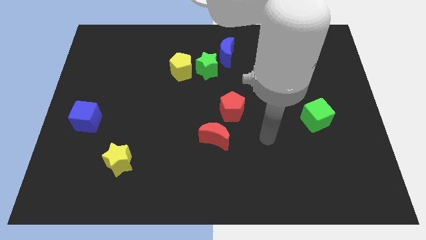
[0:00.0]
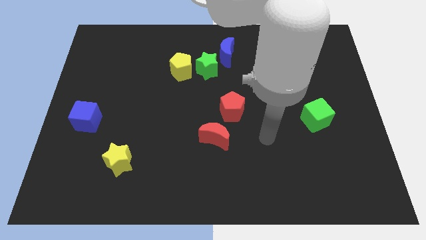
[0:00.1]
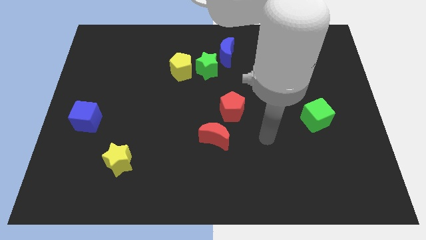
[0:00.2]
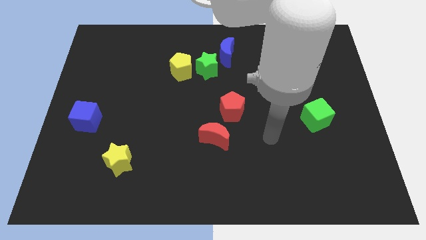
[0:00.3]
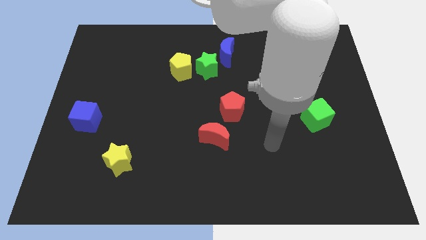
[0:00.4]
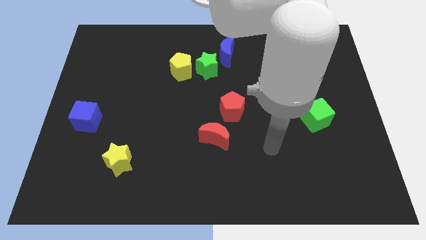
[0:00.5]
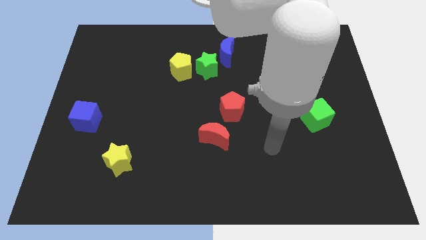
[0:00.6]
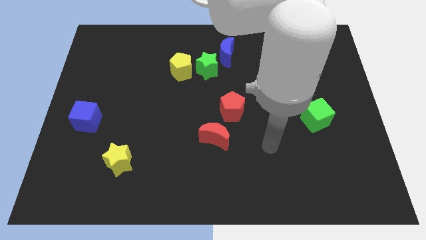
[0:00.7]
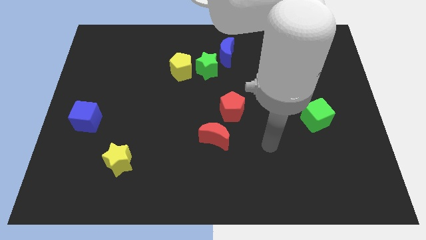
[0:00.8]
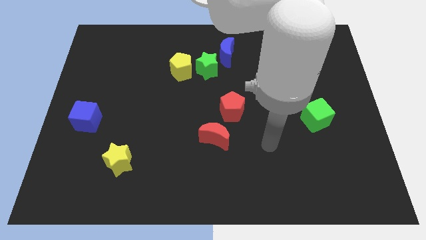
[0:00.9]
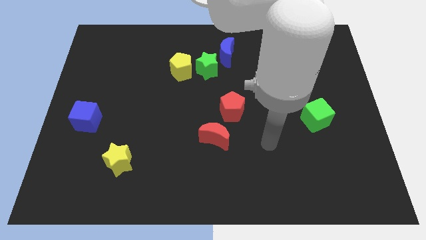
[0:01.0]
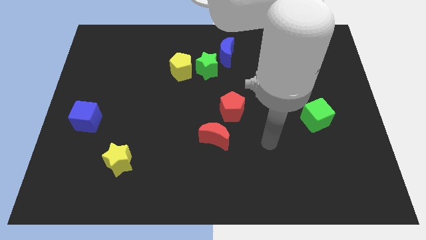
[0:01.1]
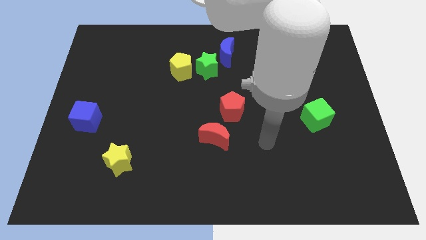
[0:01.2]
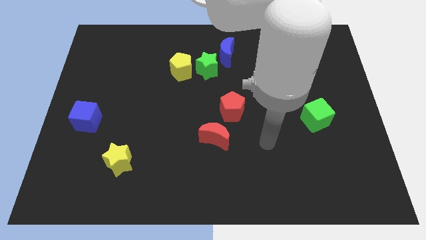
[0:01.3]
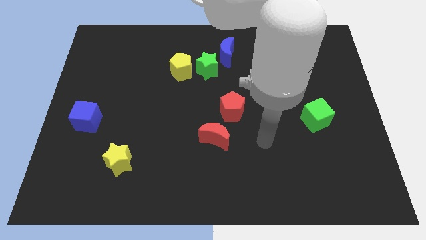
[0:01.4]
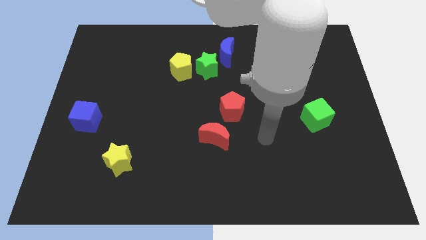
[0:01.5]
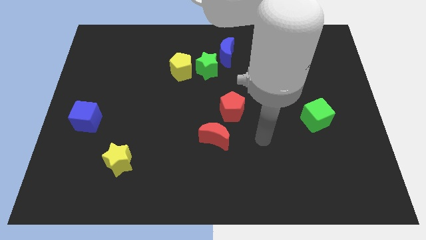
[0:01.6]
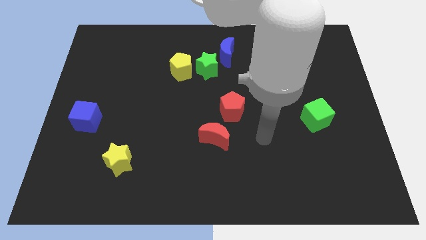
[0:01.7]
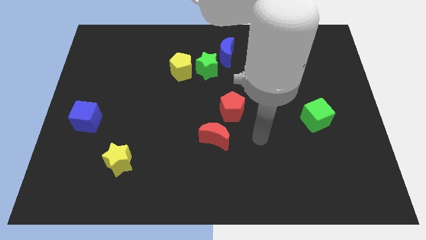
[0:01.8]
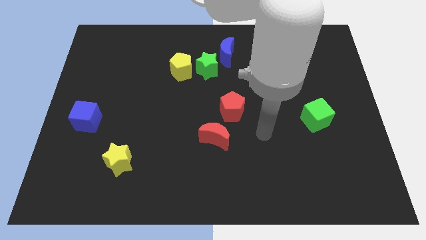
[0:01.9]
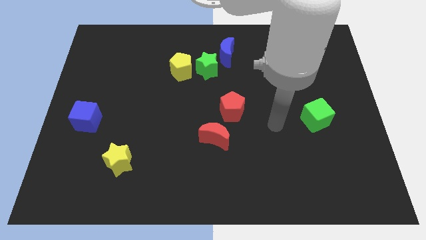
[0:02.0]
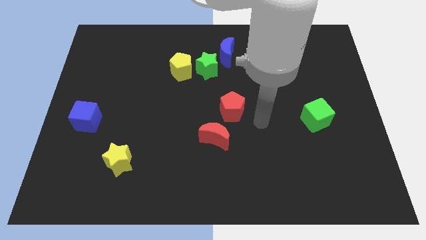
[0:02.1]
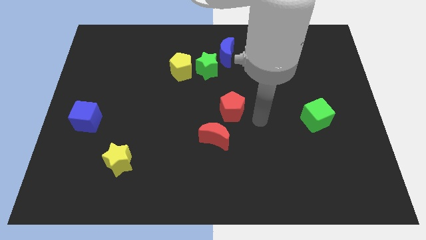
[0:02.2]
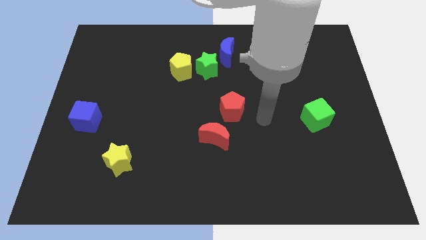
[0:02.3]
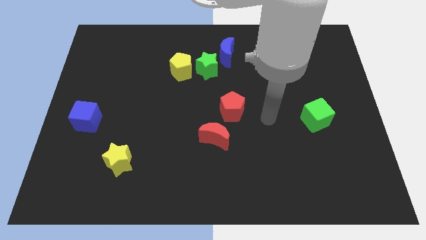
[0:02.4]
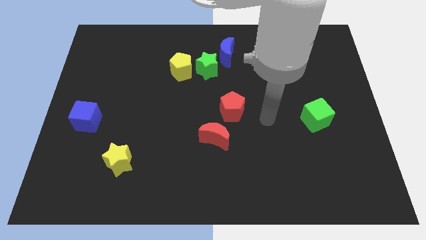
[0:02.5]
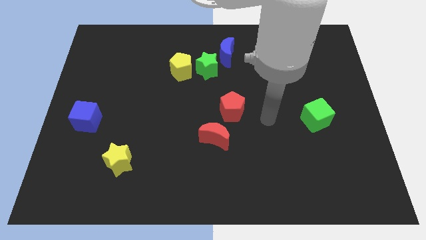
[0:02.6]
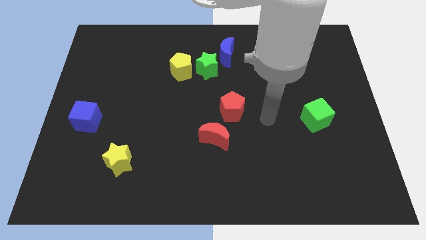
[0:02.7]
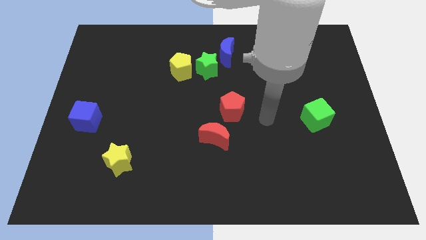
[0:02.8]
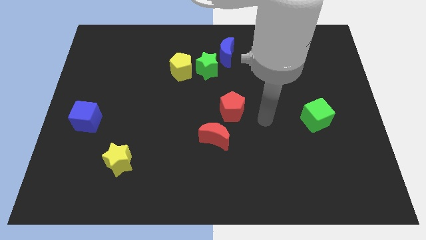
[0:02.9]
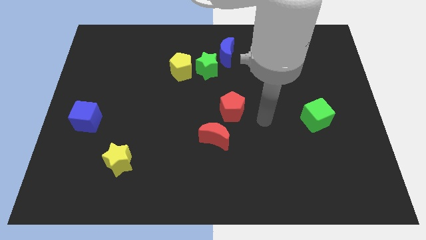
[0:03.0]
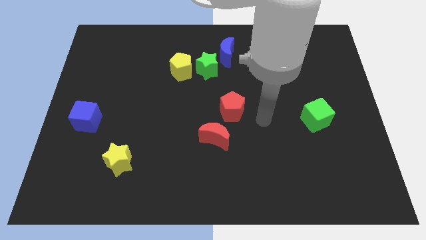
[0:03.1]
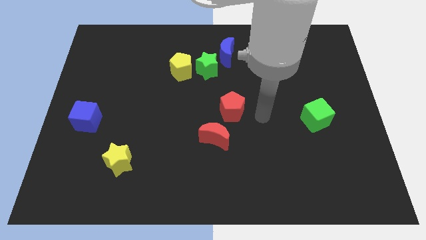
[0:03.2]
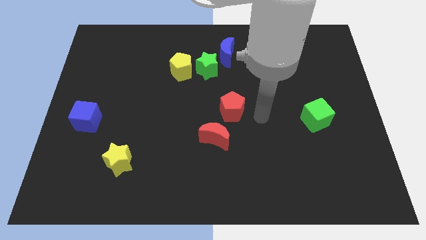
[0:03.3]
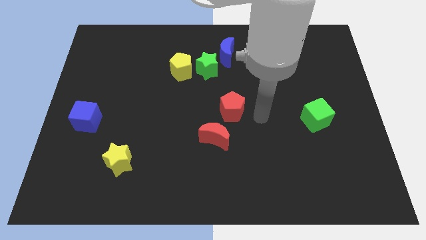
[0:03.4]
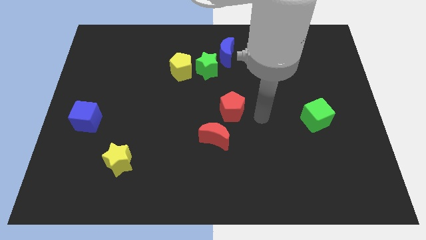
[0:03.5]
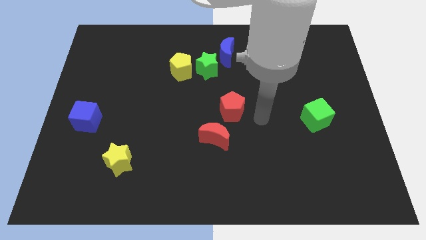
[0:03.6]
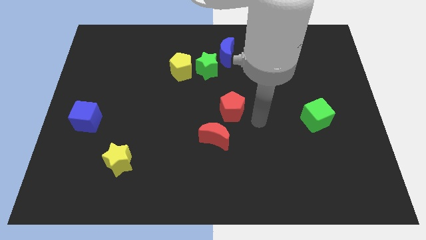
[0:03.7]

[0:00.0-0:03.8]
place your hand at right side of the red pentagon

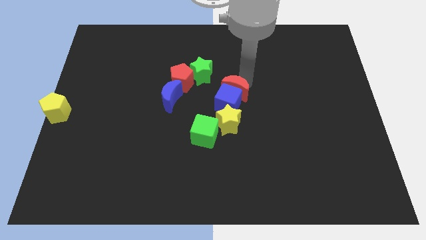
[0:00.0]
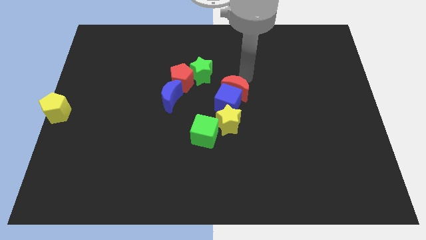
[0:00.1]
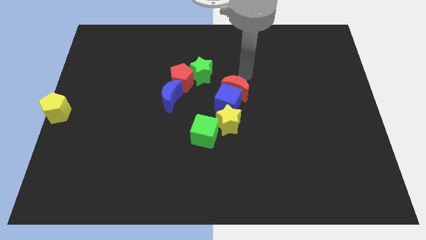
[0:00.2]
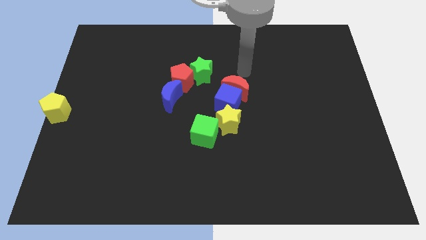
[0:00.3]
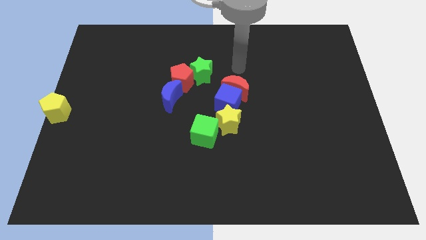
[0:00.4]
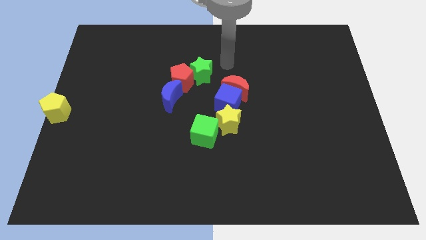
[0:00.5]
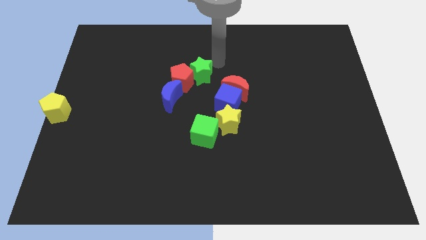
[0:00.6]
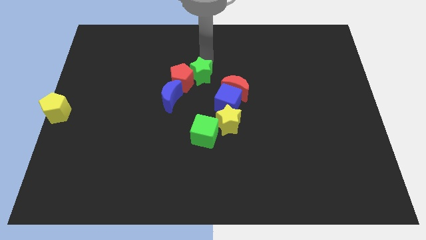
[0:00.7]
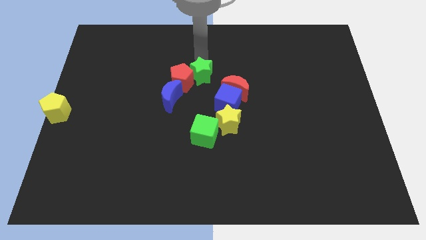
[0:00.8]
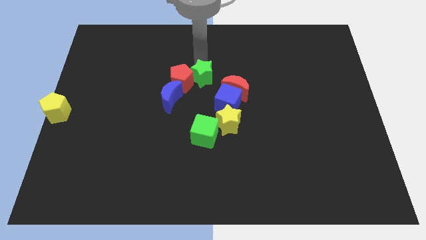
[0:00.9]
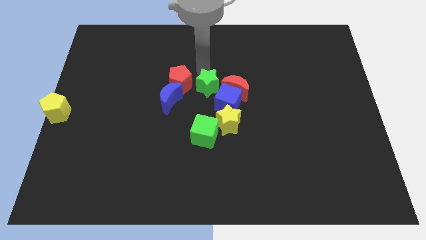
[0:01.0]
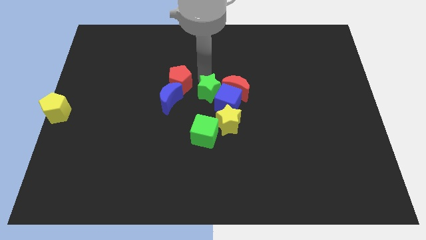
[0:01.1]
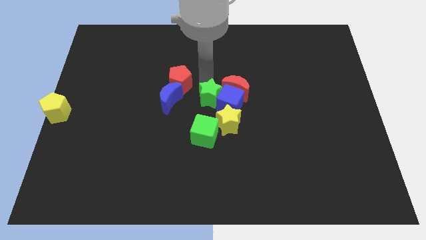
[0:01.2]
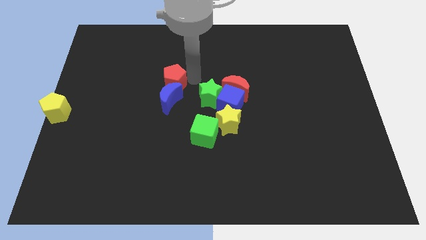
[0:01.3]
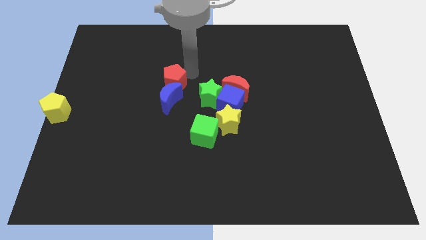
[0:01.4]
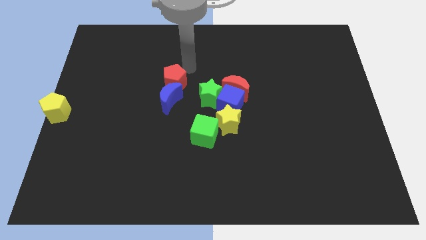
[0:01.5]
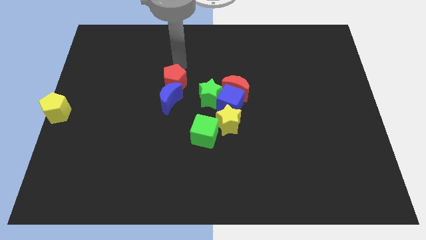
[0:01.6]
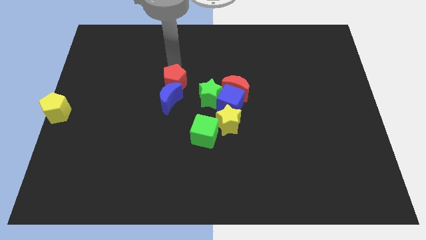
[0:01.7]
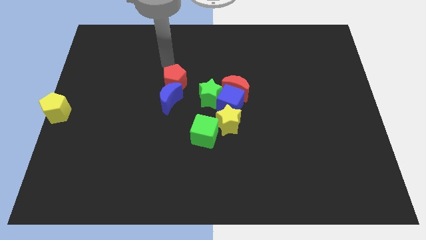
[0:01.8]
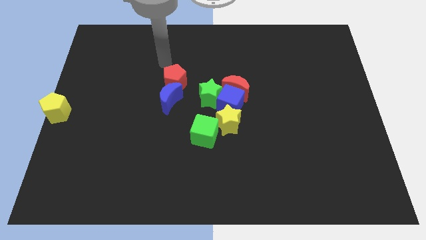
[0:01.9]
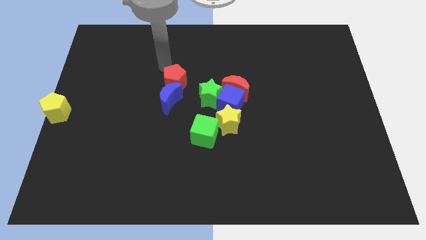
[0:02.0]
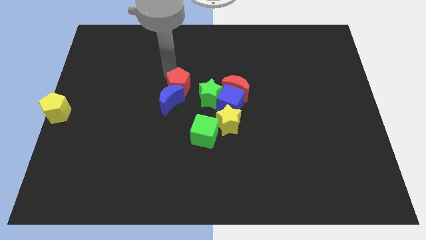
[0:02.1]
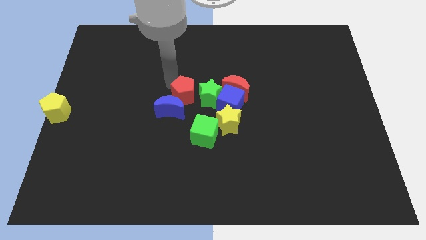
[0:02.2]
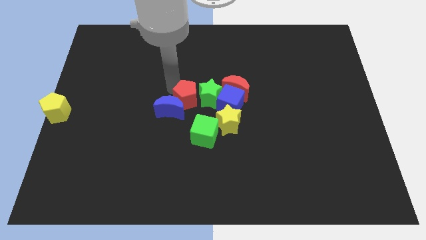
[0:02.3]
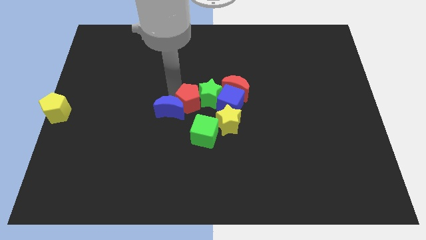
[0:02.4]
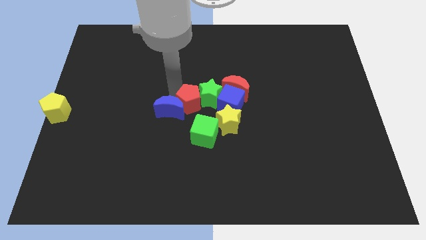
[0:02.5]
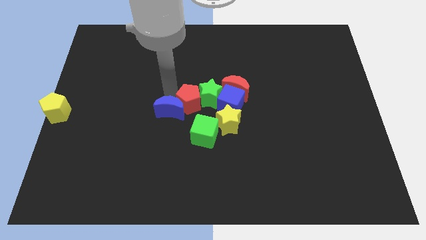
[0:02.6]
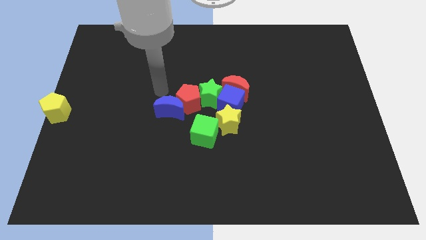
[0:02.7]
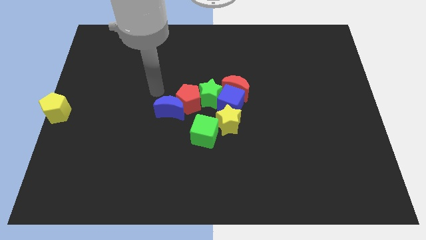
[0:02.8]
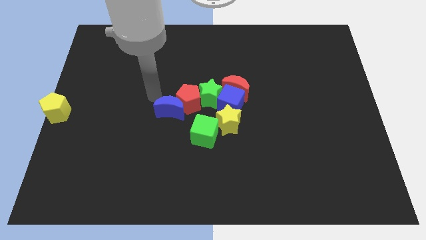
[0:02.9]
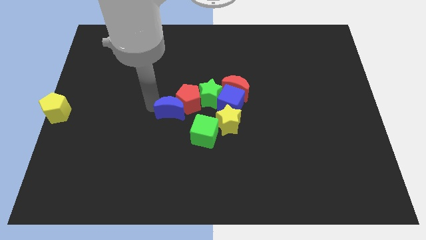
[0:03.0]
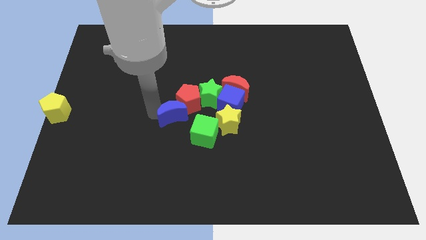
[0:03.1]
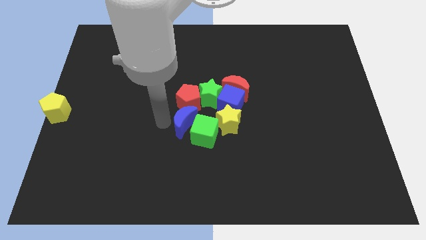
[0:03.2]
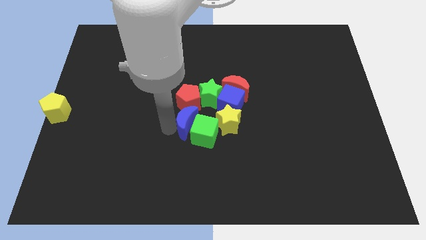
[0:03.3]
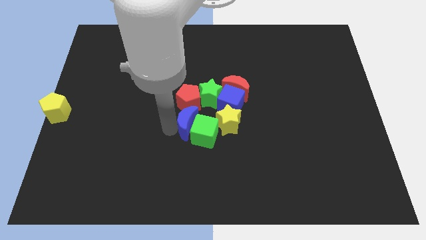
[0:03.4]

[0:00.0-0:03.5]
move the red pentagon to a group of blocks

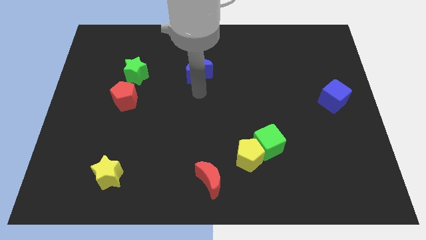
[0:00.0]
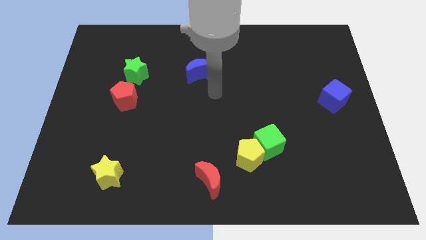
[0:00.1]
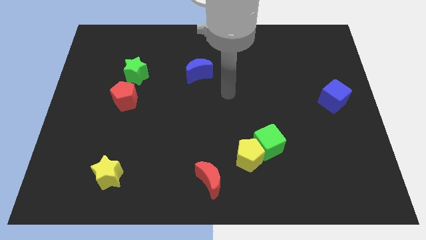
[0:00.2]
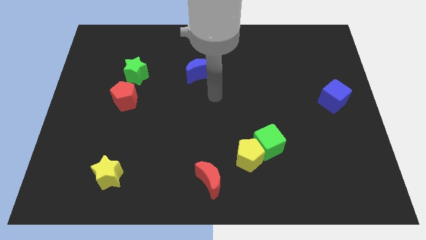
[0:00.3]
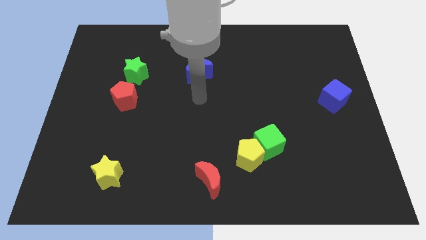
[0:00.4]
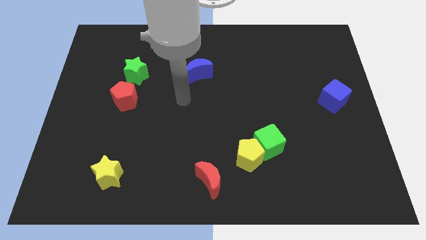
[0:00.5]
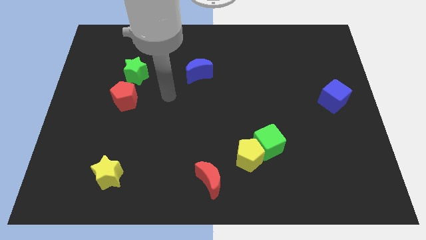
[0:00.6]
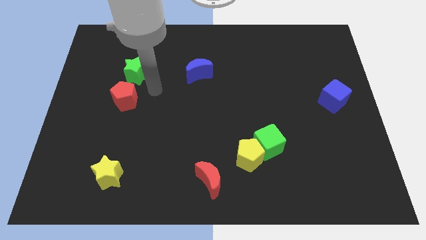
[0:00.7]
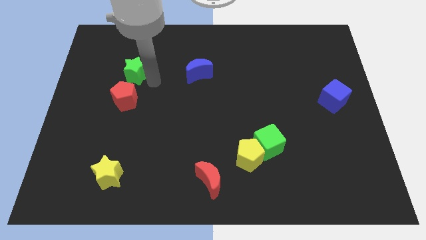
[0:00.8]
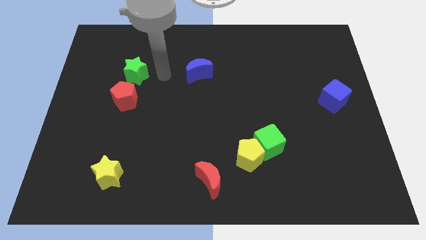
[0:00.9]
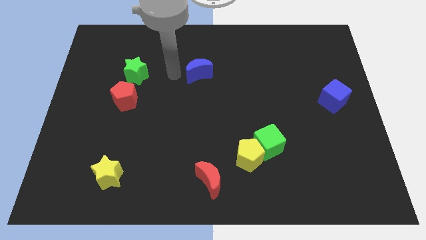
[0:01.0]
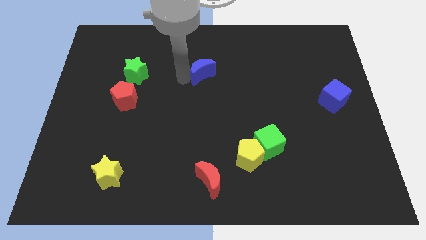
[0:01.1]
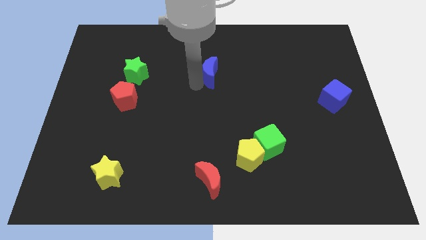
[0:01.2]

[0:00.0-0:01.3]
turn blue moon towards center

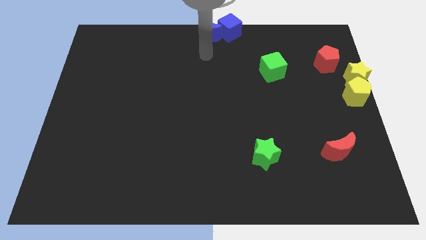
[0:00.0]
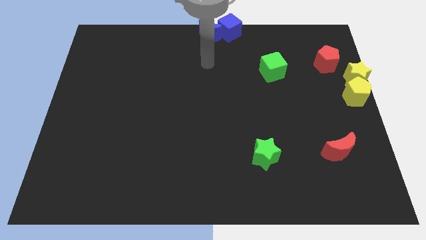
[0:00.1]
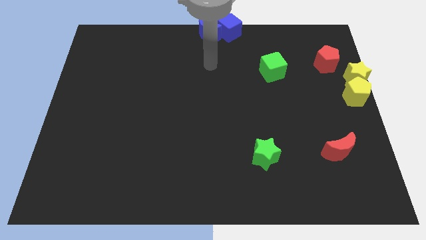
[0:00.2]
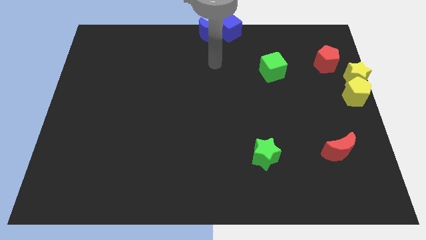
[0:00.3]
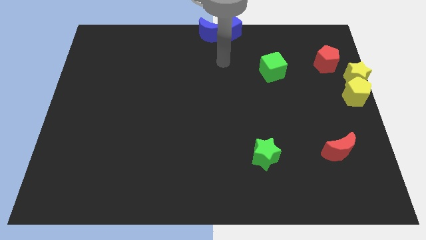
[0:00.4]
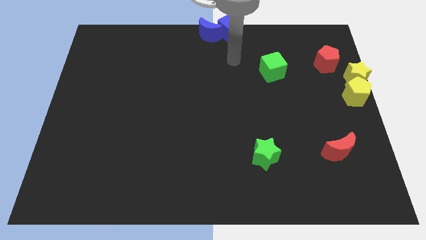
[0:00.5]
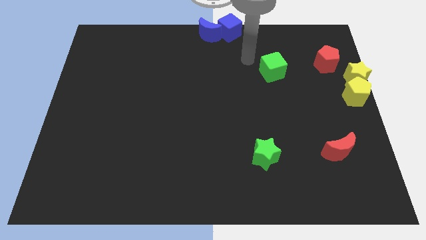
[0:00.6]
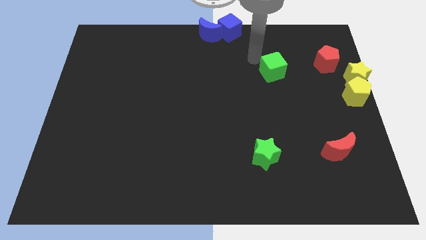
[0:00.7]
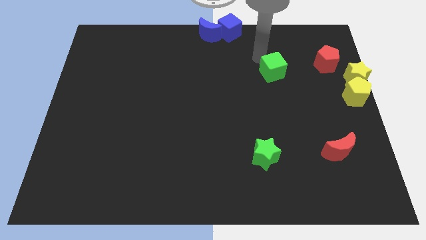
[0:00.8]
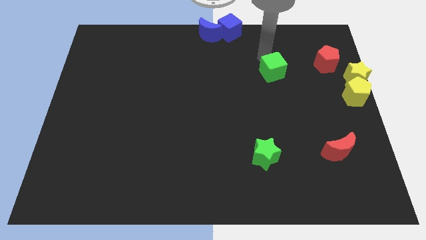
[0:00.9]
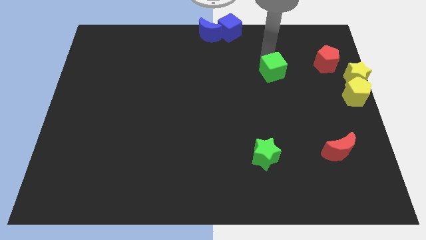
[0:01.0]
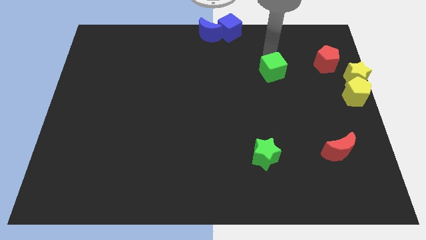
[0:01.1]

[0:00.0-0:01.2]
place the arm on the top of the green cube
